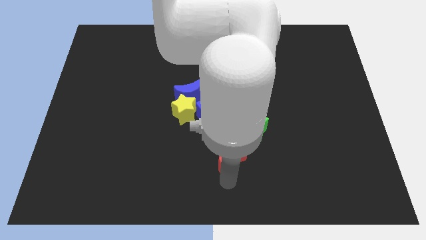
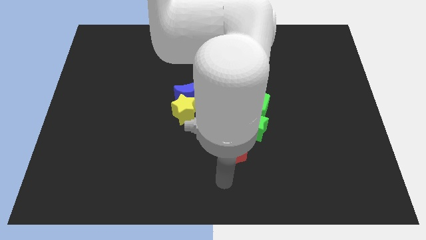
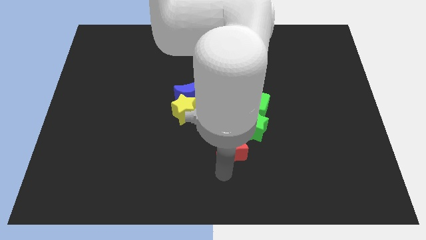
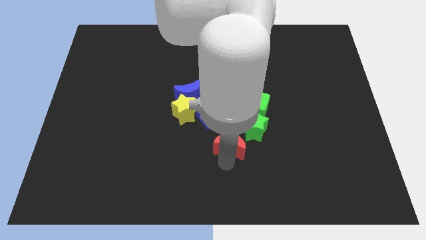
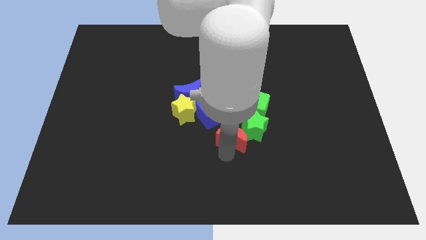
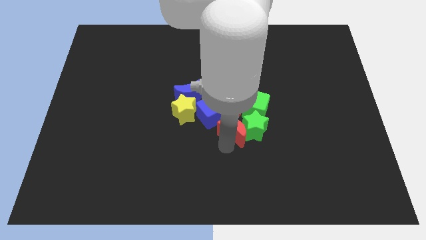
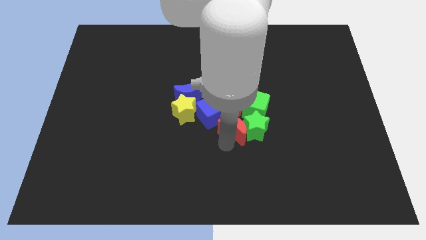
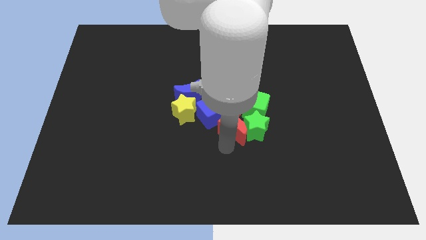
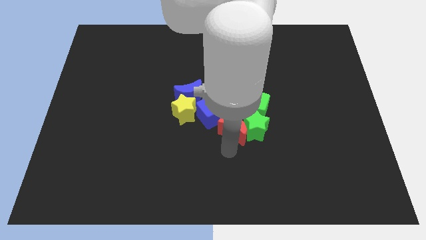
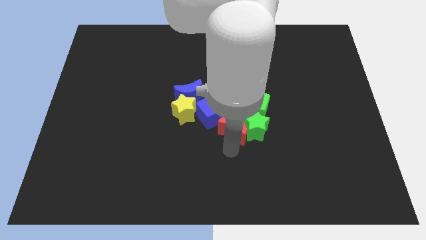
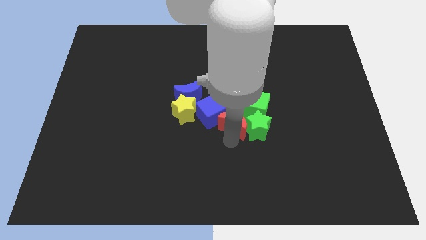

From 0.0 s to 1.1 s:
push the red moon to the left of the green star

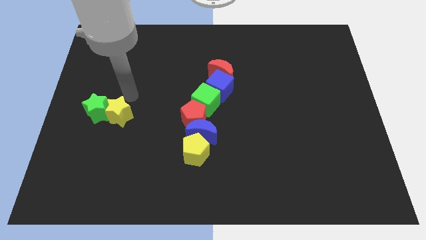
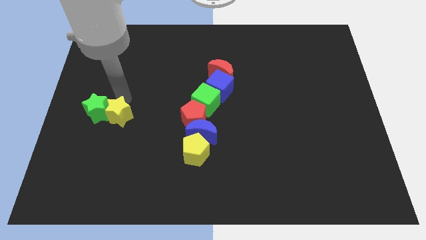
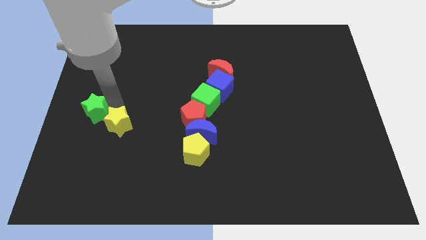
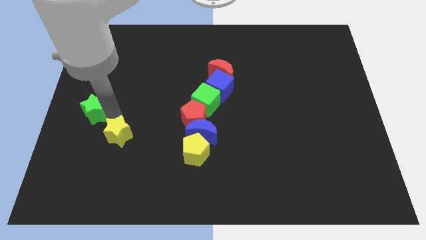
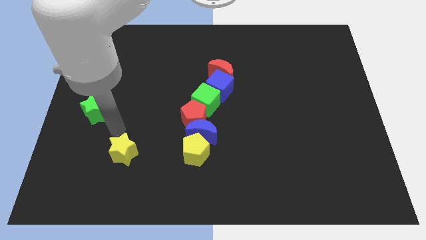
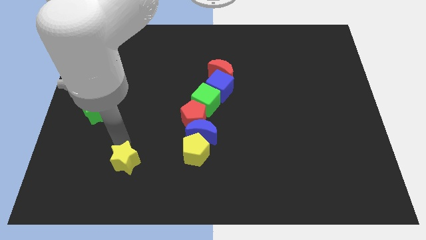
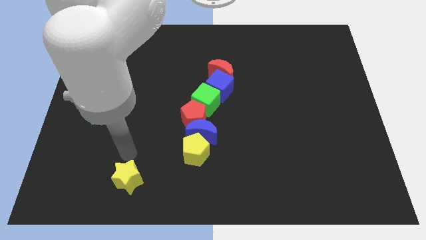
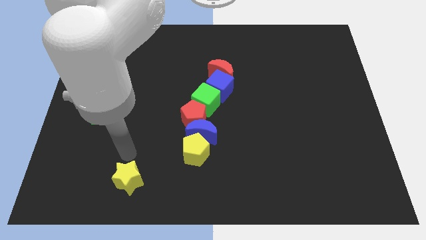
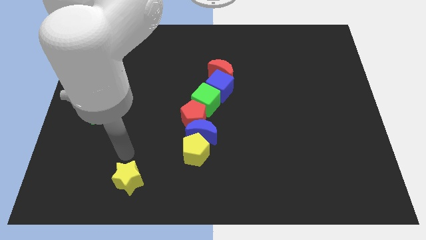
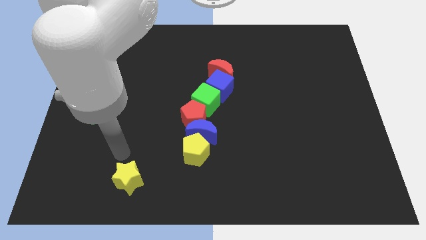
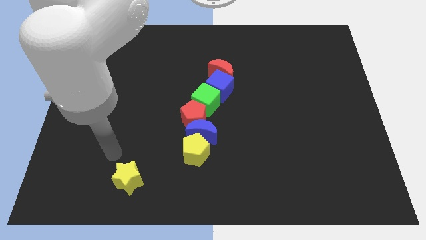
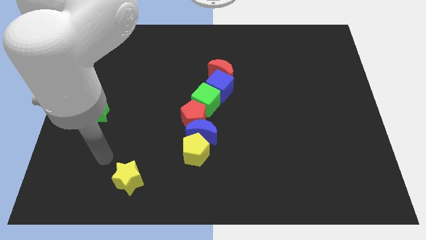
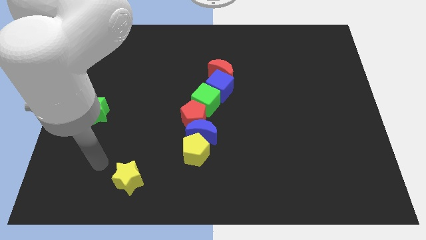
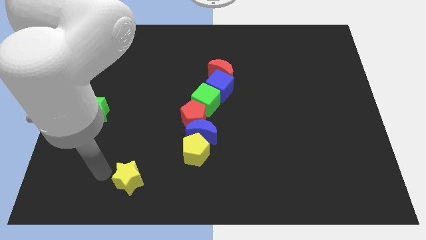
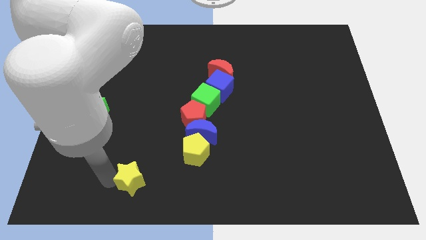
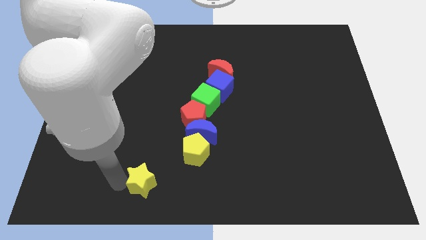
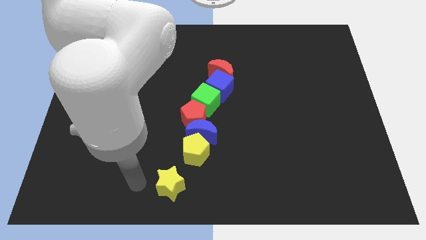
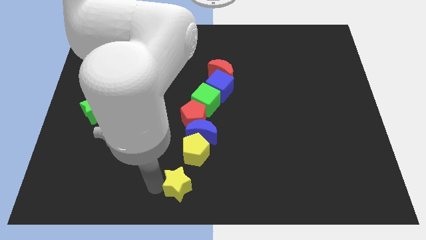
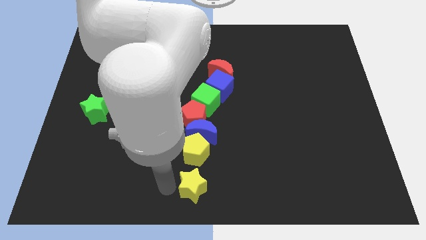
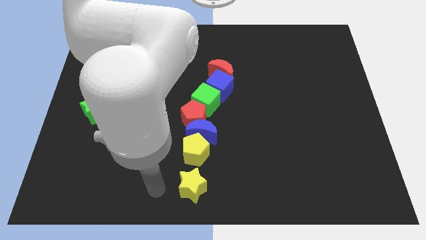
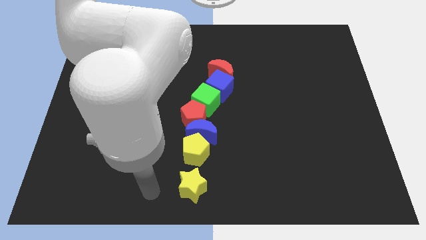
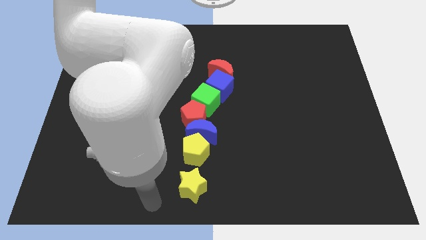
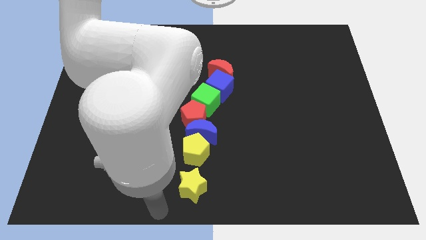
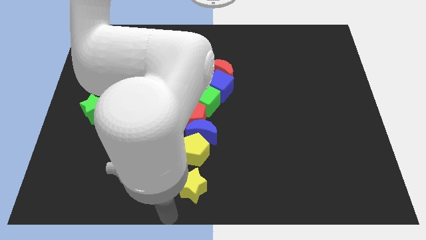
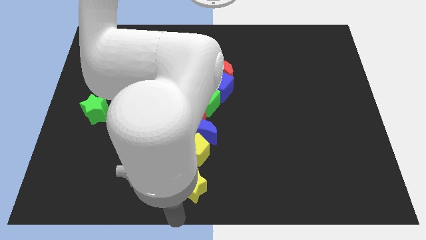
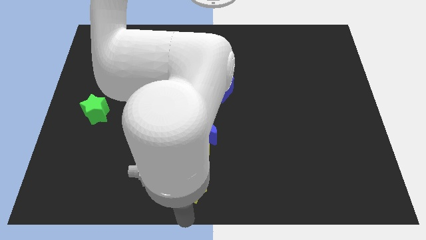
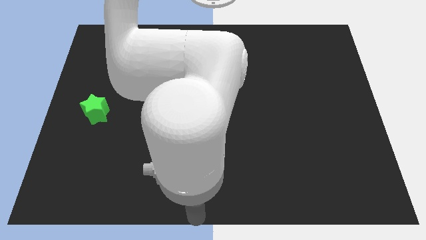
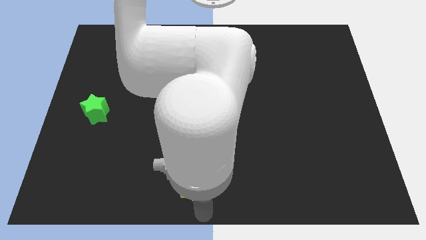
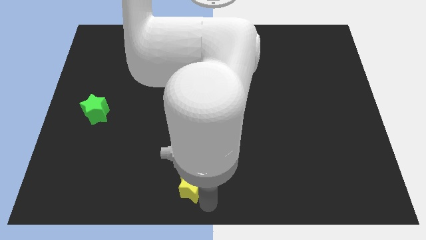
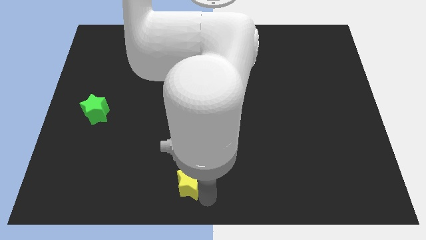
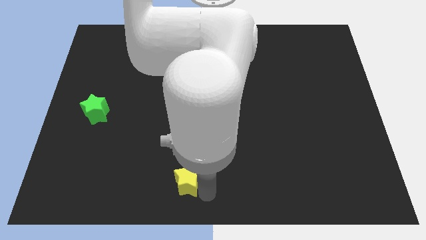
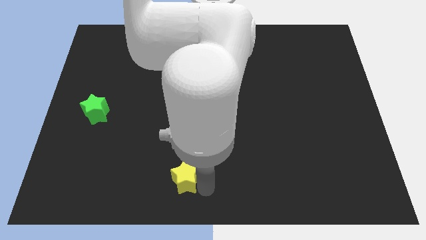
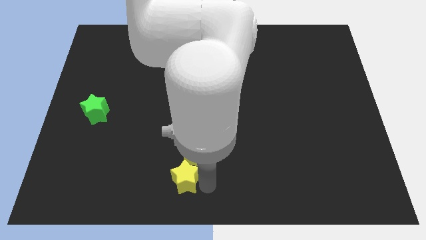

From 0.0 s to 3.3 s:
move the green star to the bottom of the yellow pentagon

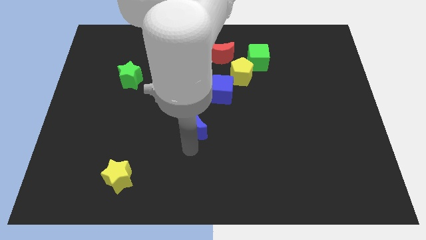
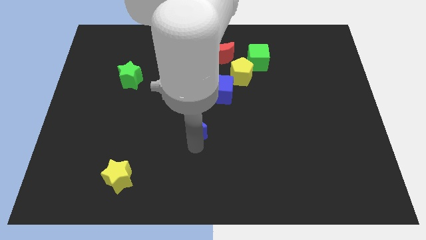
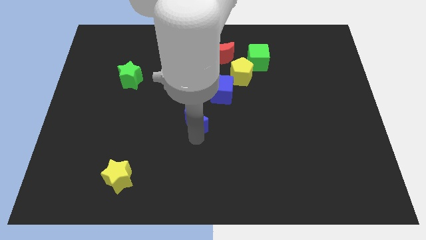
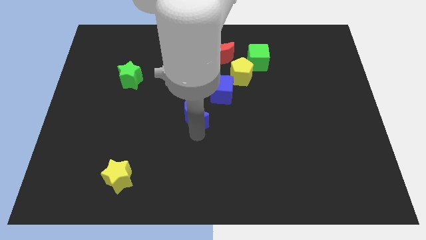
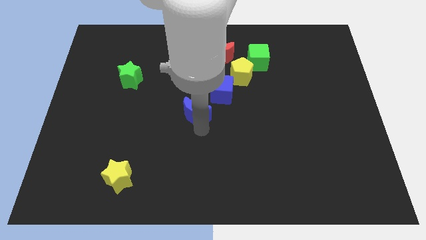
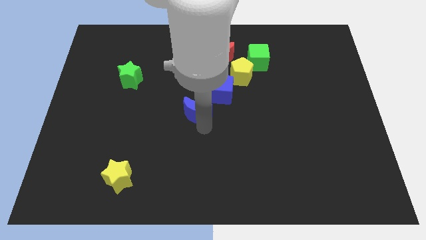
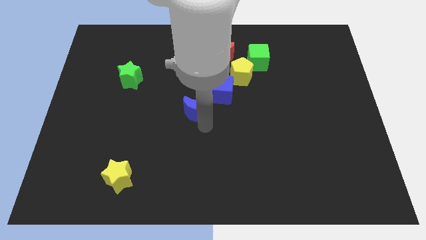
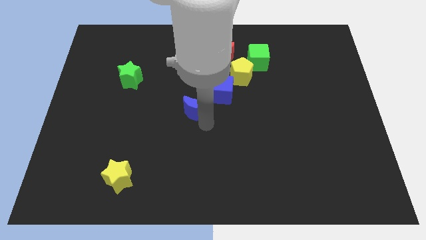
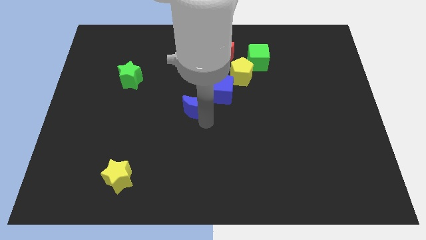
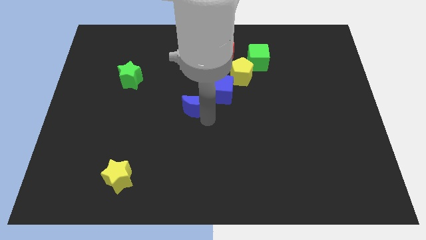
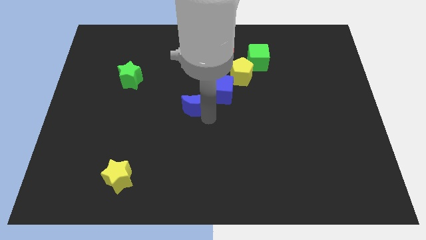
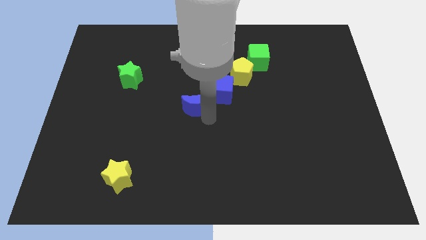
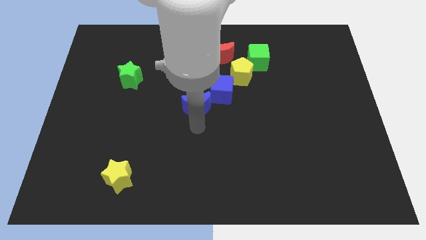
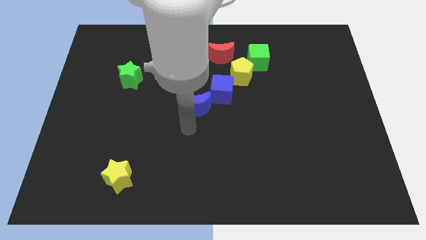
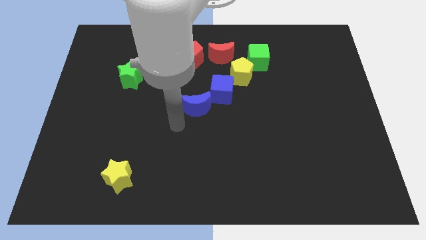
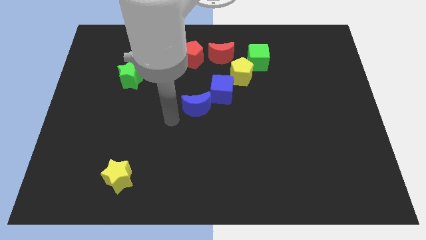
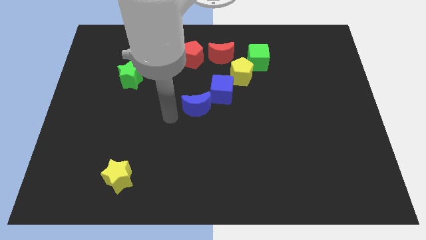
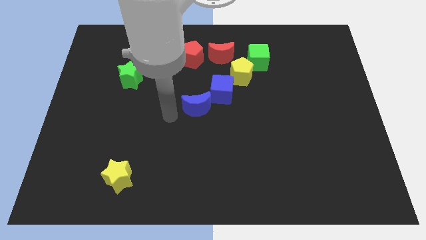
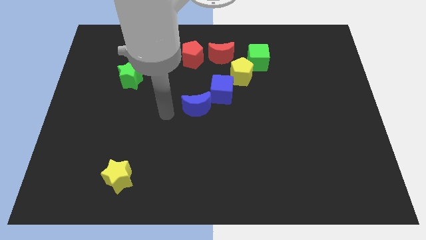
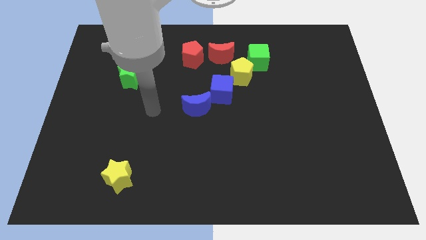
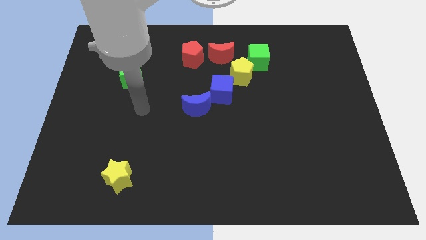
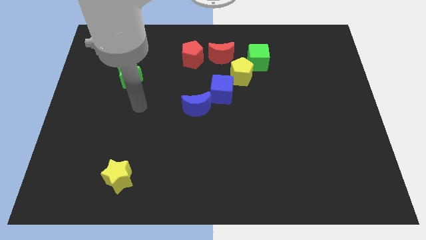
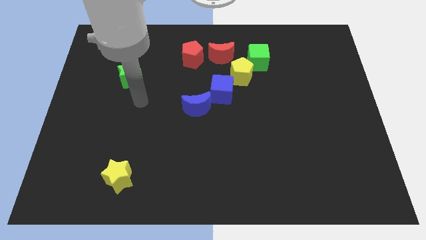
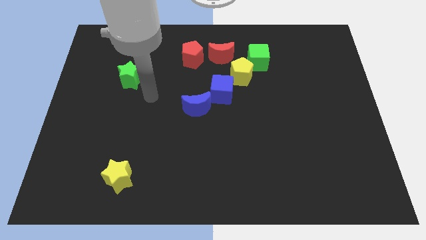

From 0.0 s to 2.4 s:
place blue crescent to down left bottom corner of the blue cube

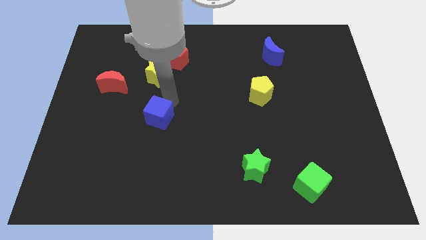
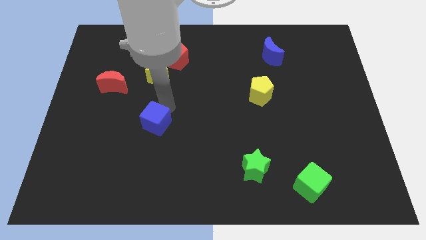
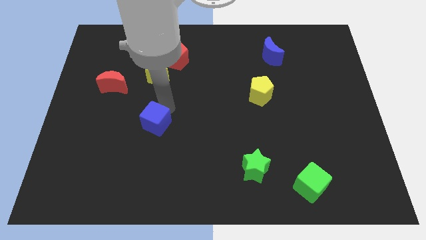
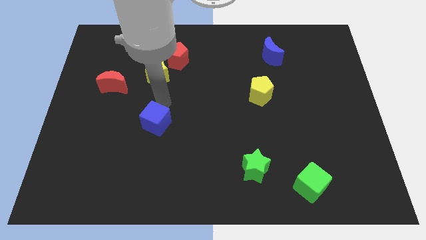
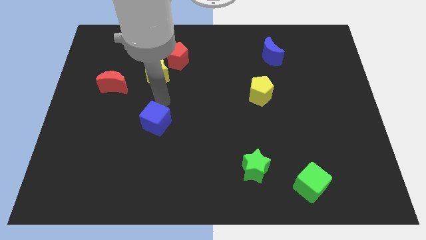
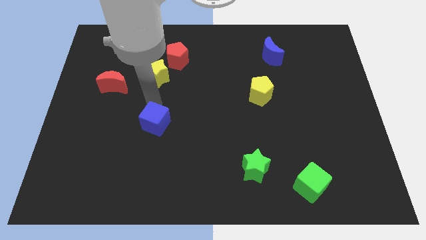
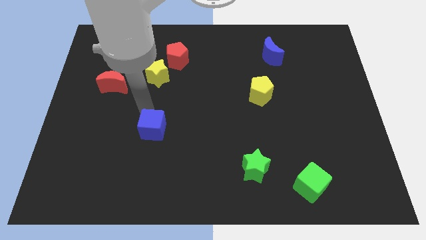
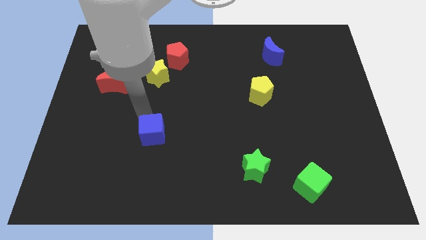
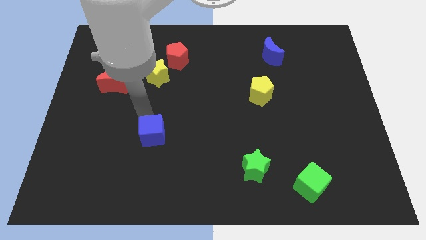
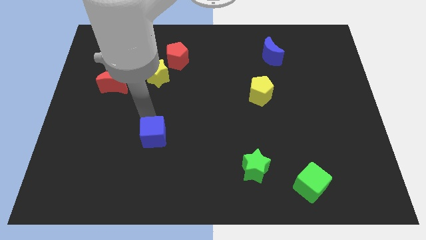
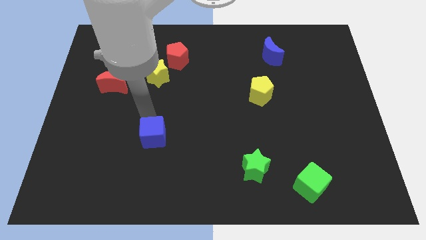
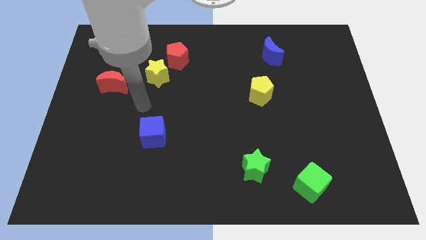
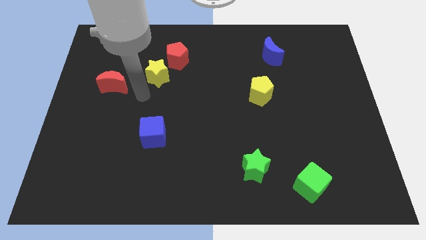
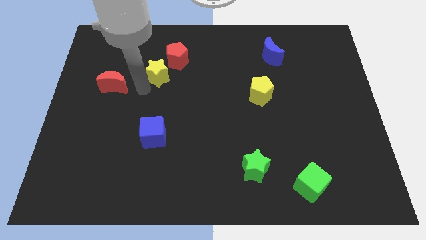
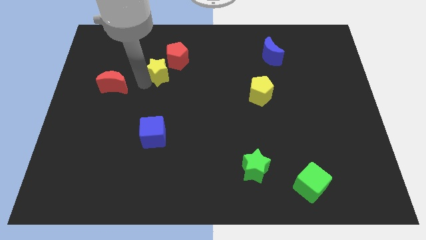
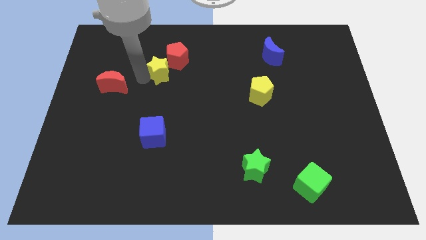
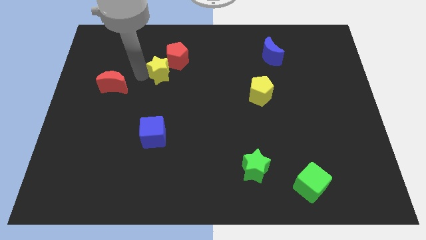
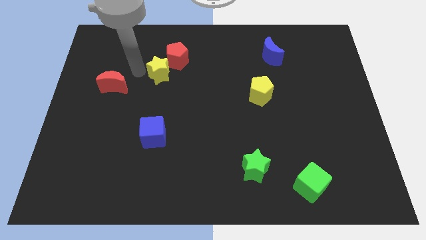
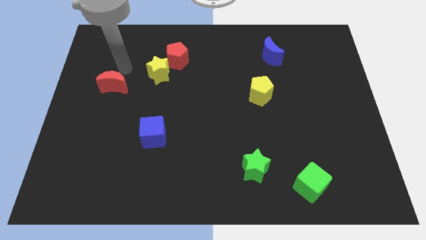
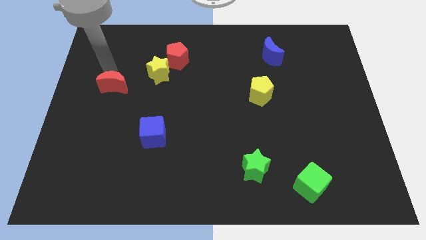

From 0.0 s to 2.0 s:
move the arm towards the top of red crescent

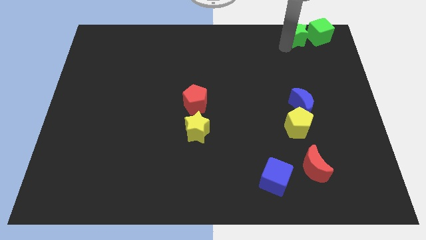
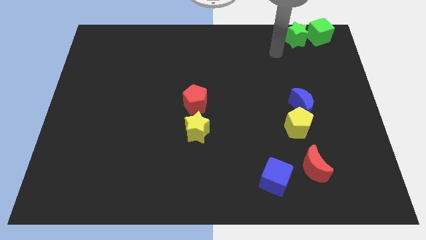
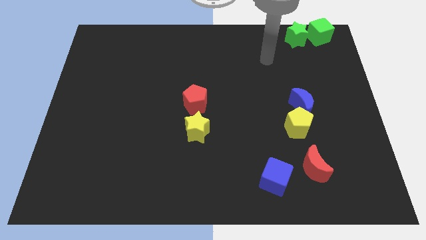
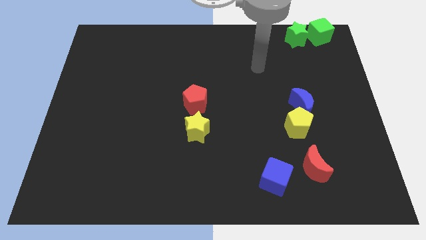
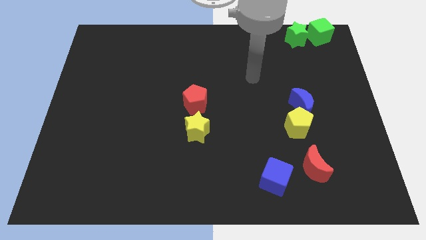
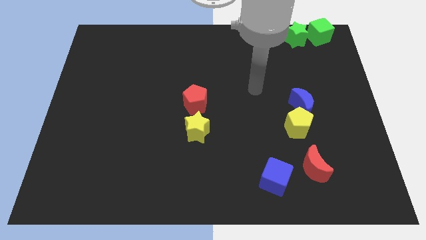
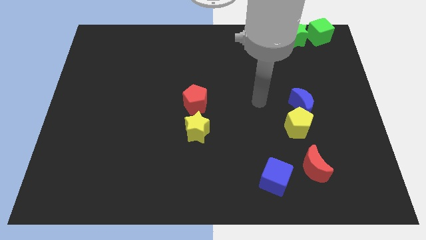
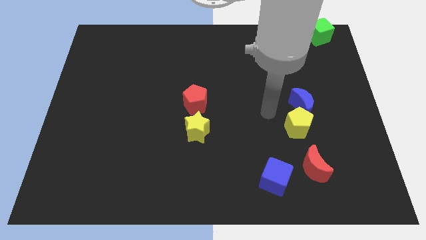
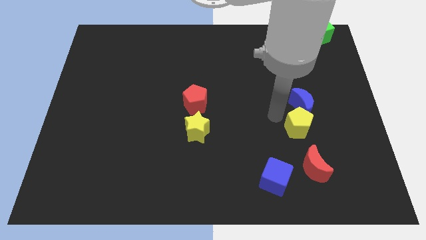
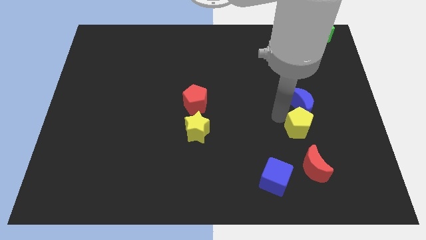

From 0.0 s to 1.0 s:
move your arm away from green star
